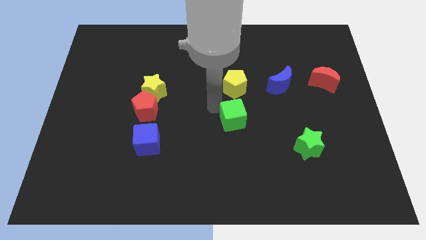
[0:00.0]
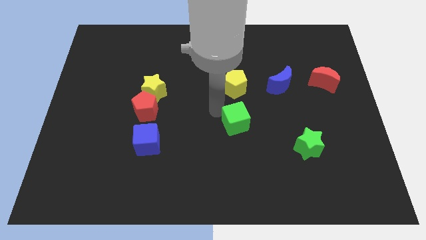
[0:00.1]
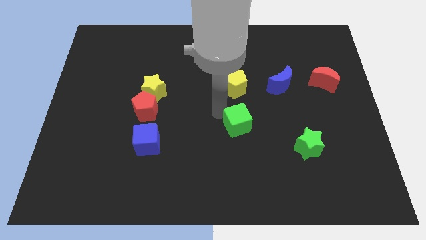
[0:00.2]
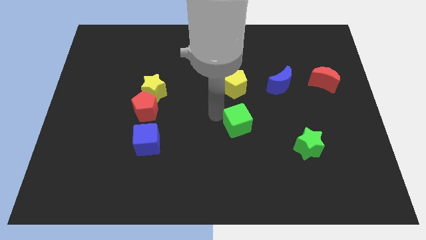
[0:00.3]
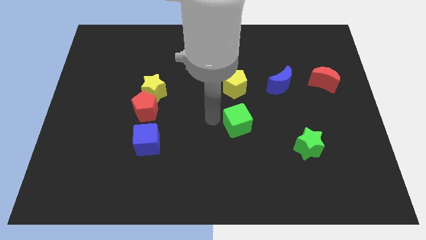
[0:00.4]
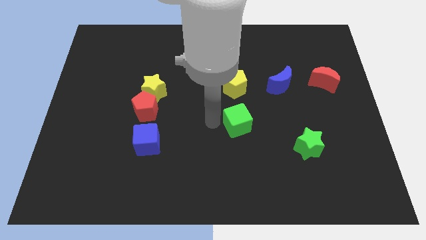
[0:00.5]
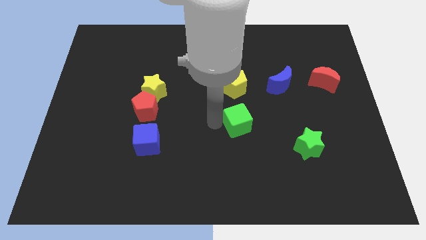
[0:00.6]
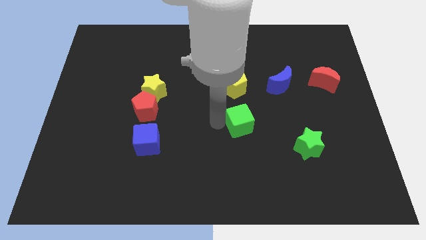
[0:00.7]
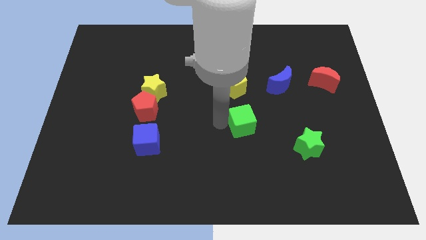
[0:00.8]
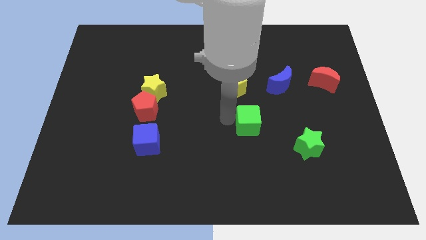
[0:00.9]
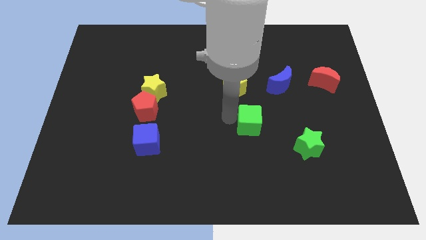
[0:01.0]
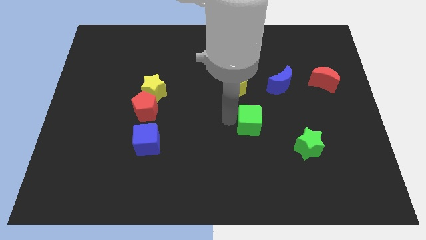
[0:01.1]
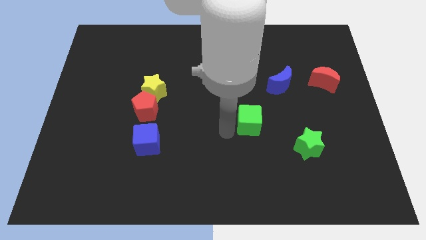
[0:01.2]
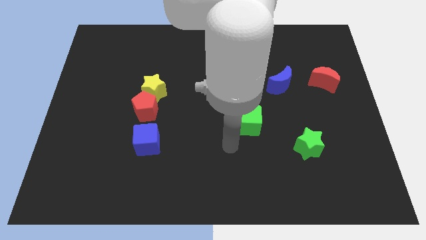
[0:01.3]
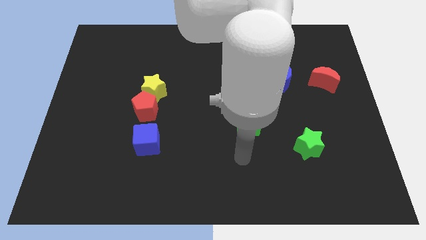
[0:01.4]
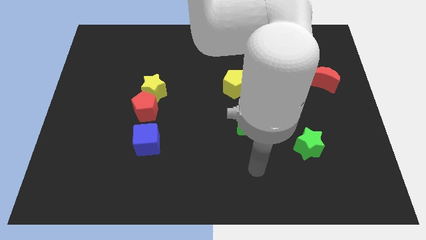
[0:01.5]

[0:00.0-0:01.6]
push the green cube slightly to the right side

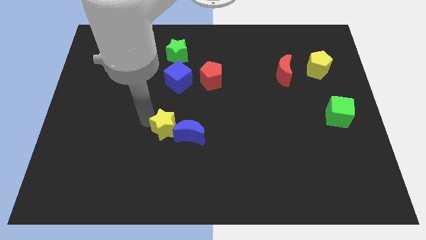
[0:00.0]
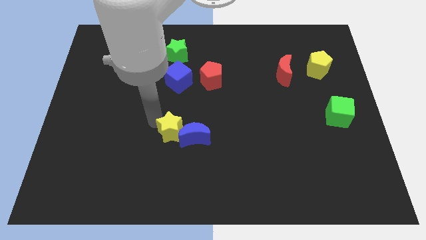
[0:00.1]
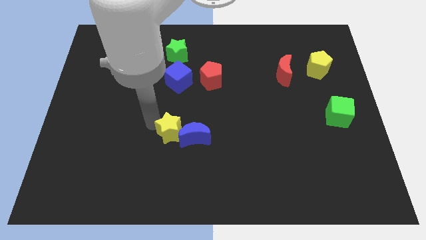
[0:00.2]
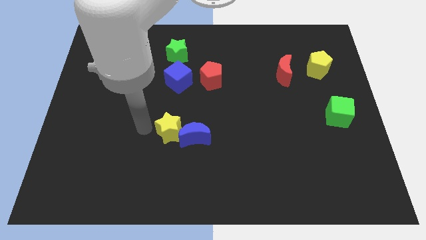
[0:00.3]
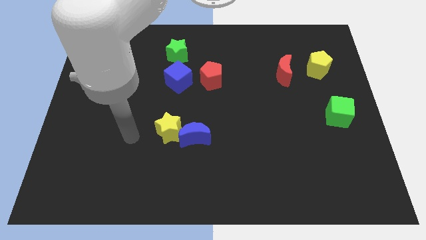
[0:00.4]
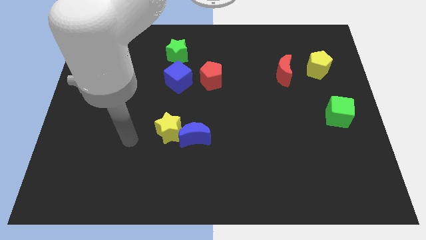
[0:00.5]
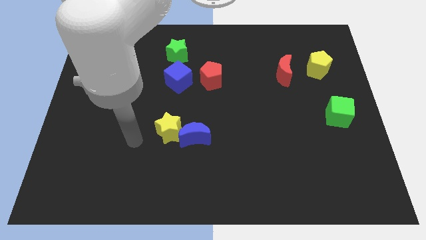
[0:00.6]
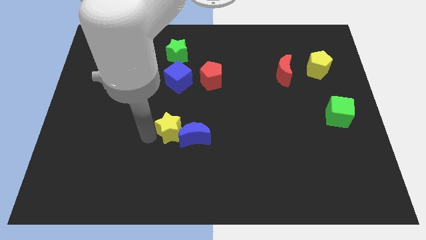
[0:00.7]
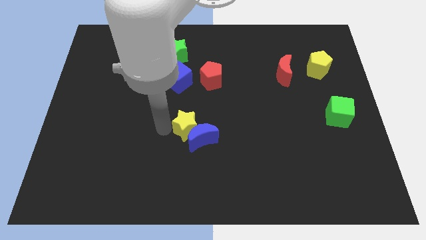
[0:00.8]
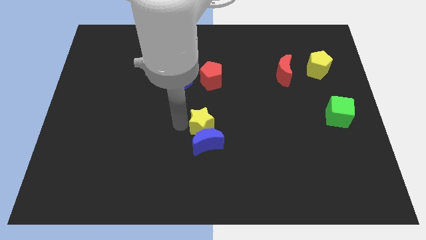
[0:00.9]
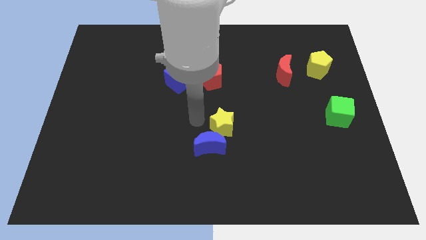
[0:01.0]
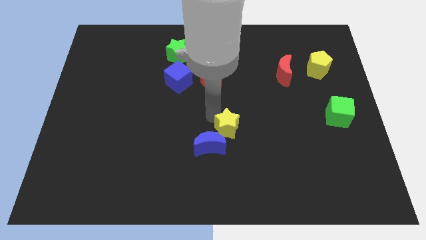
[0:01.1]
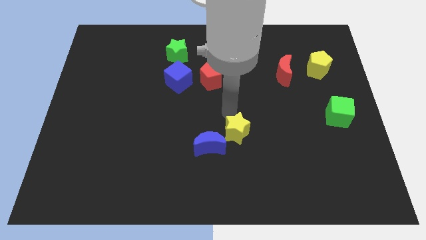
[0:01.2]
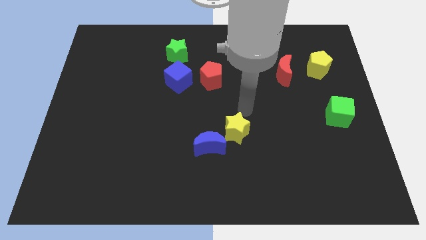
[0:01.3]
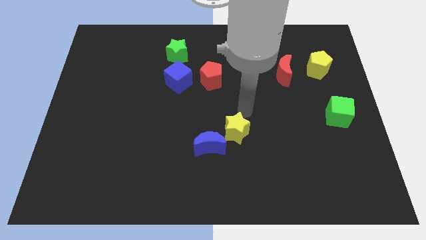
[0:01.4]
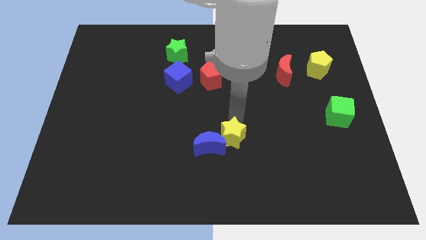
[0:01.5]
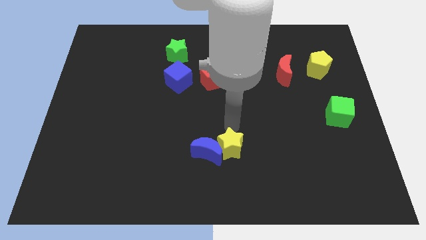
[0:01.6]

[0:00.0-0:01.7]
move the yellow star to the right of the blue moon

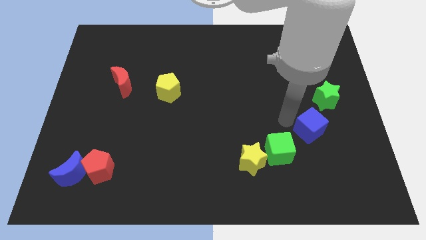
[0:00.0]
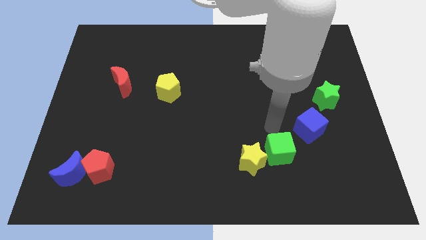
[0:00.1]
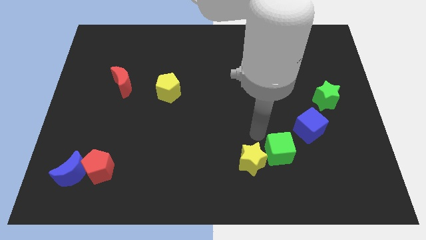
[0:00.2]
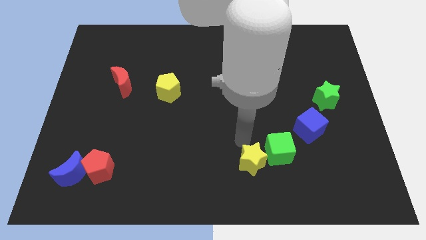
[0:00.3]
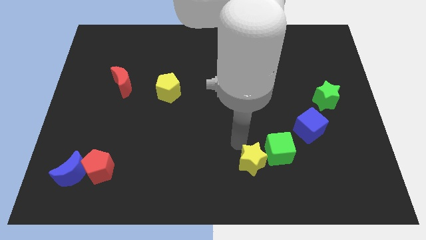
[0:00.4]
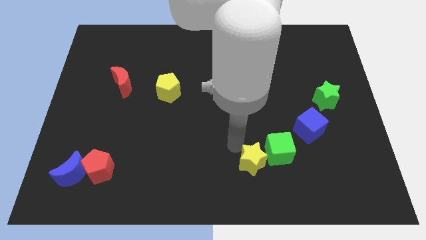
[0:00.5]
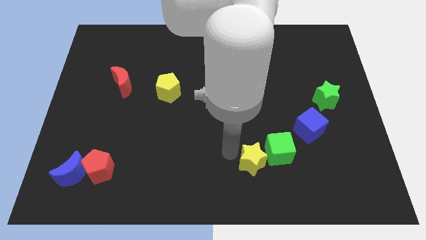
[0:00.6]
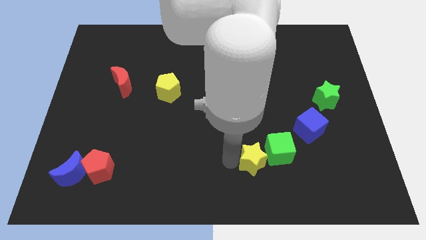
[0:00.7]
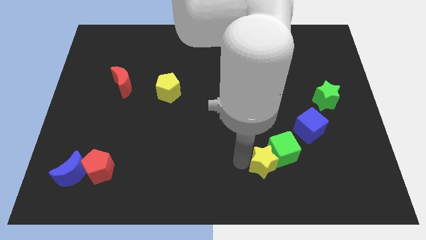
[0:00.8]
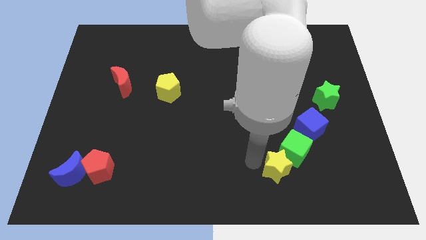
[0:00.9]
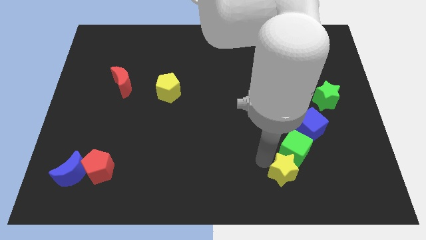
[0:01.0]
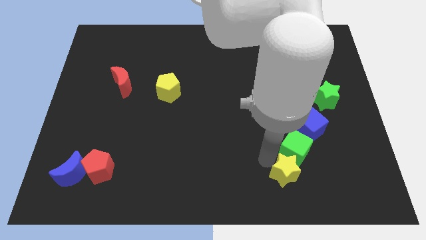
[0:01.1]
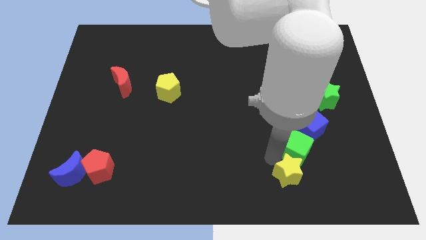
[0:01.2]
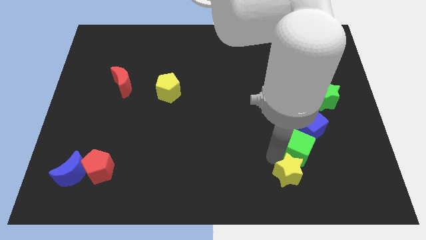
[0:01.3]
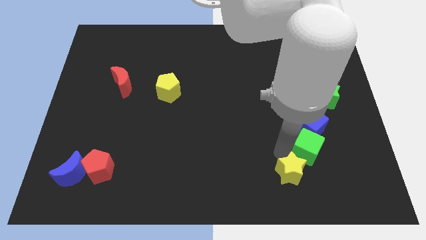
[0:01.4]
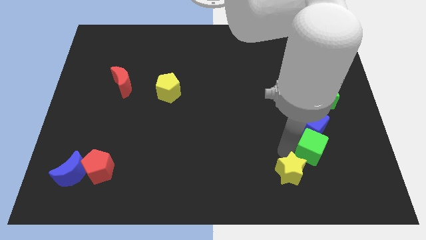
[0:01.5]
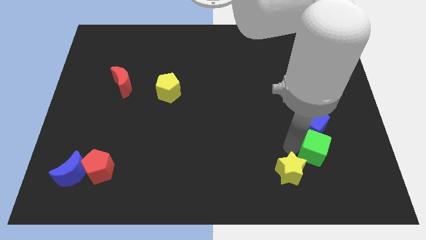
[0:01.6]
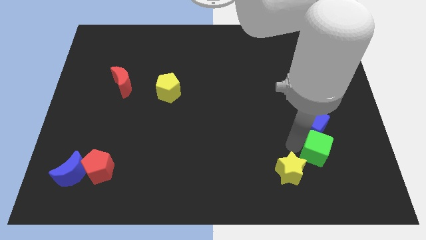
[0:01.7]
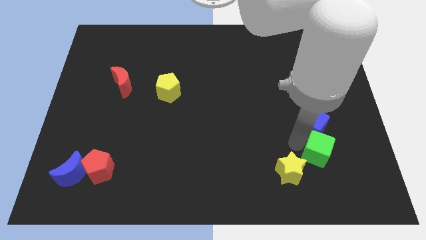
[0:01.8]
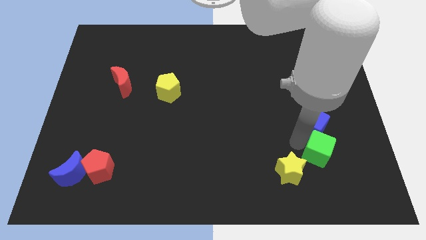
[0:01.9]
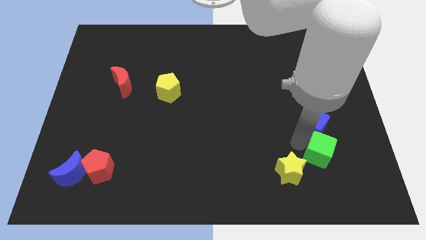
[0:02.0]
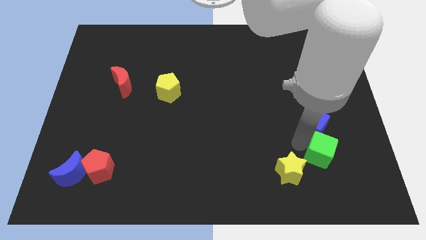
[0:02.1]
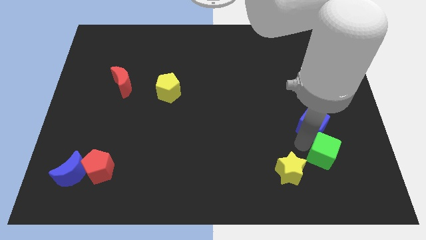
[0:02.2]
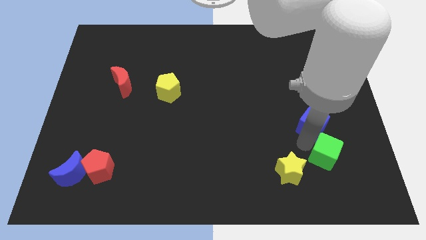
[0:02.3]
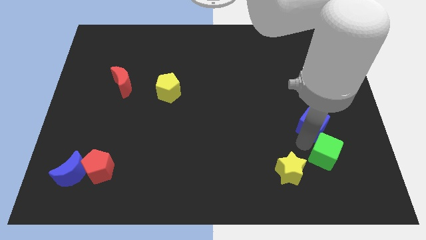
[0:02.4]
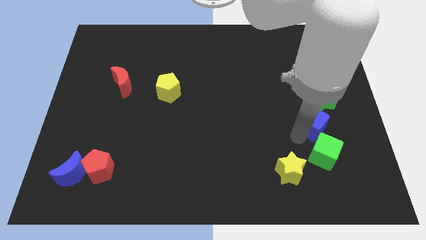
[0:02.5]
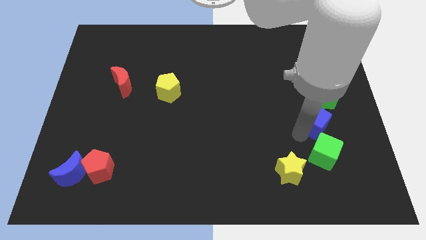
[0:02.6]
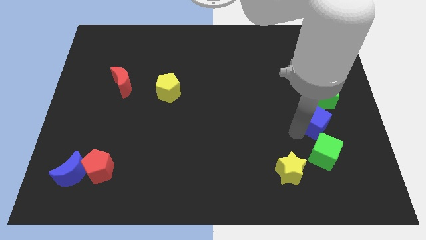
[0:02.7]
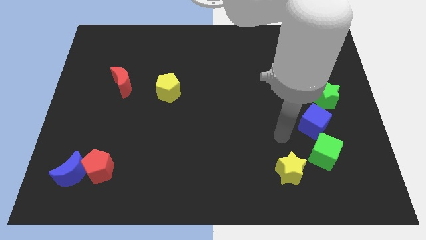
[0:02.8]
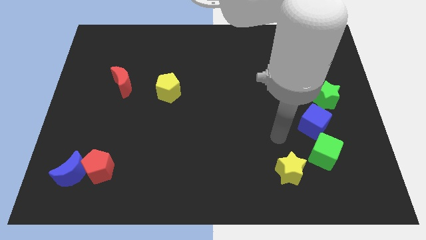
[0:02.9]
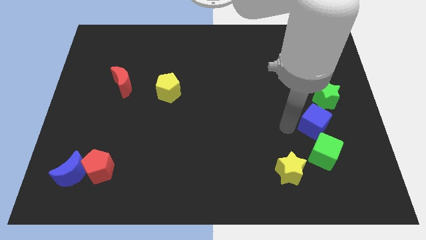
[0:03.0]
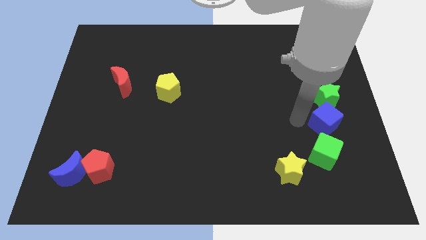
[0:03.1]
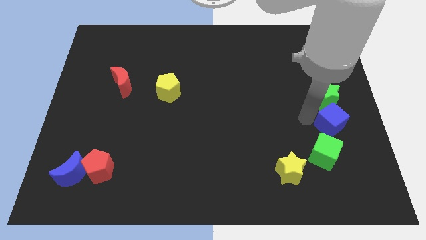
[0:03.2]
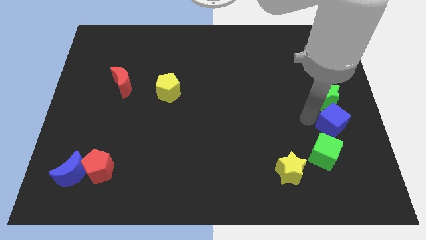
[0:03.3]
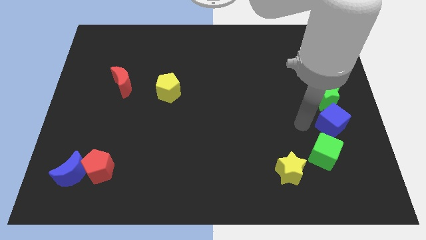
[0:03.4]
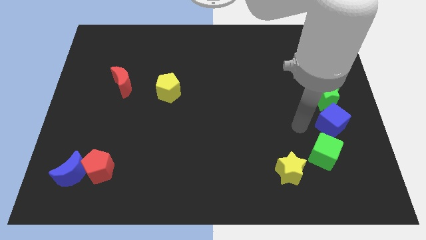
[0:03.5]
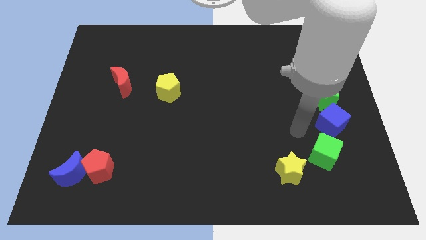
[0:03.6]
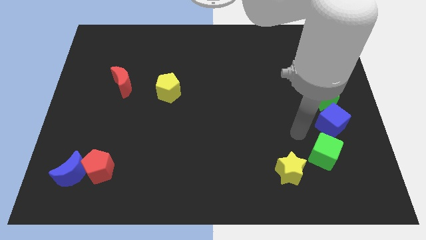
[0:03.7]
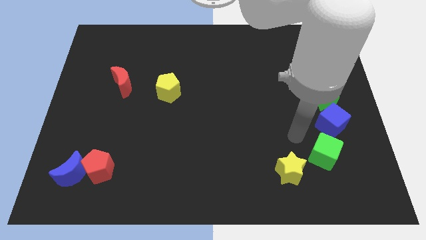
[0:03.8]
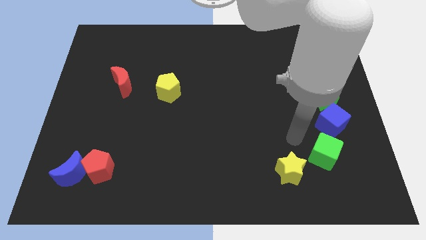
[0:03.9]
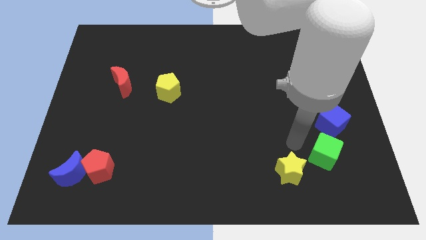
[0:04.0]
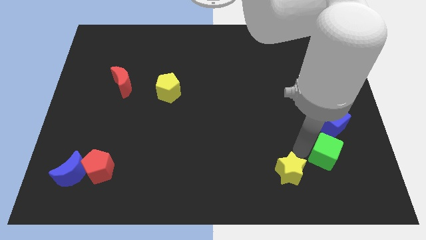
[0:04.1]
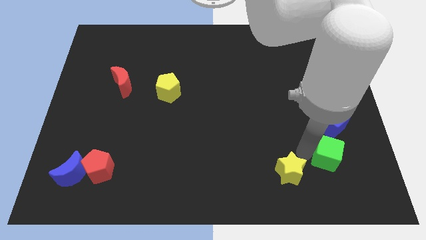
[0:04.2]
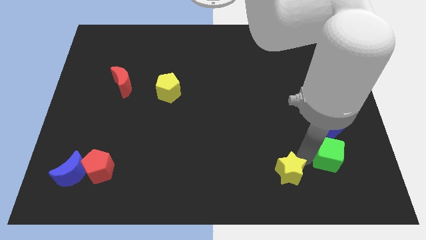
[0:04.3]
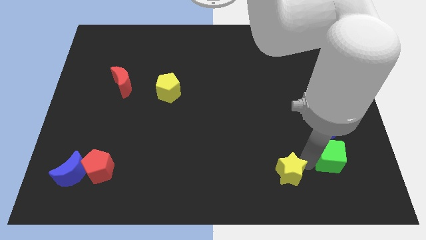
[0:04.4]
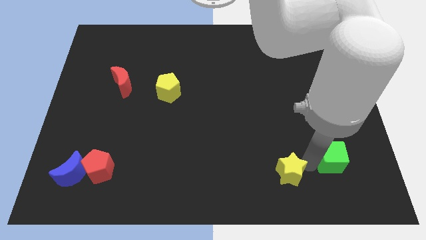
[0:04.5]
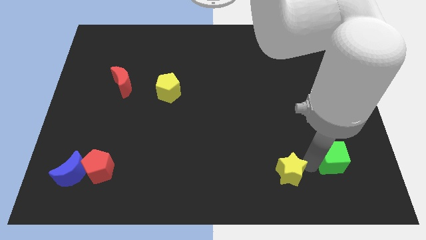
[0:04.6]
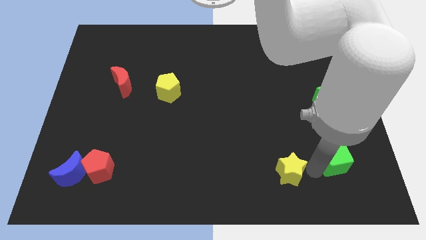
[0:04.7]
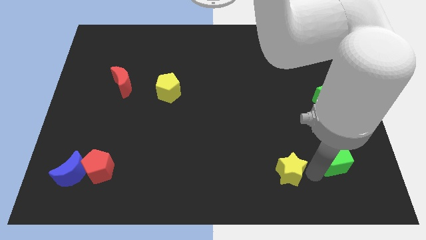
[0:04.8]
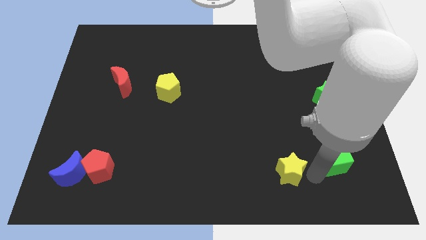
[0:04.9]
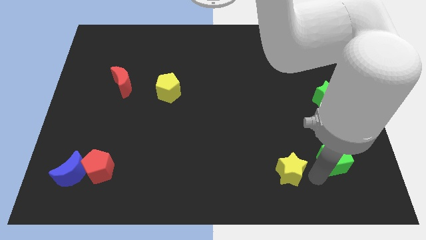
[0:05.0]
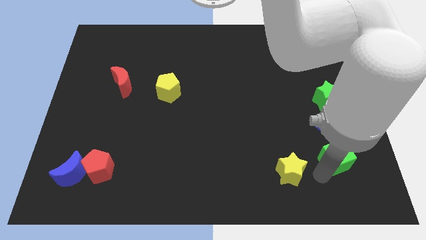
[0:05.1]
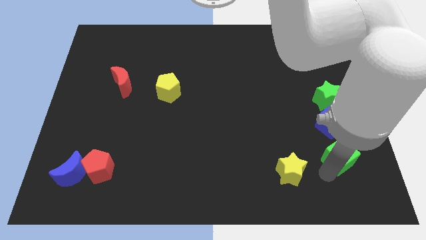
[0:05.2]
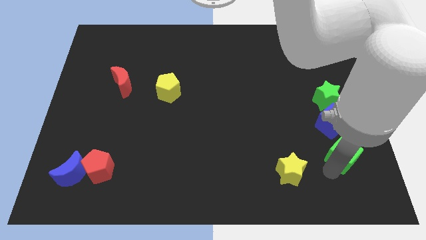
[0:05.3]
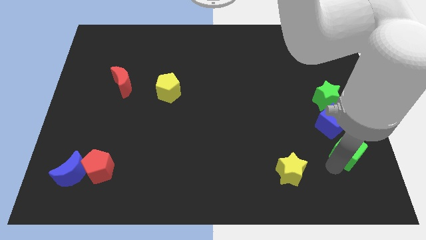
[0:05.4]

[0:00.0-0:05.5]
move the blue and green cube to the bottom of the green star
